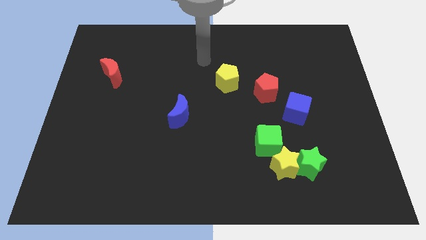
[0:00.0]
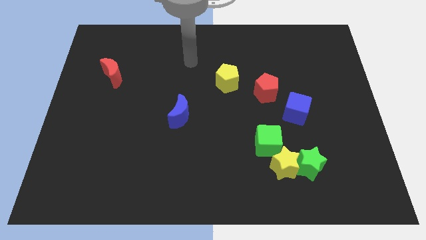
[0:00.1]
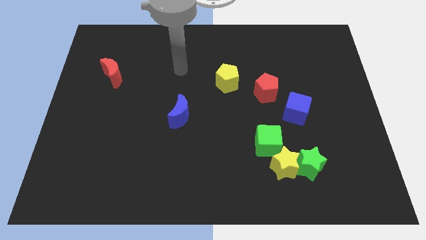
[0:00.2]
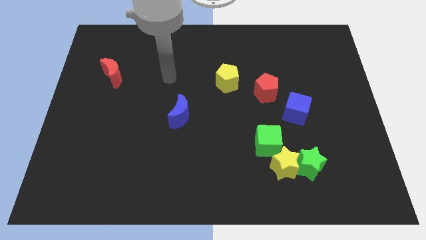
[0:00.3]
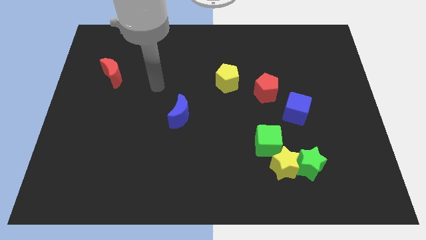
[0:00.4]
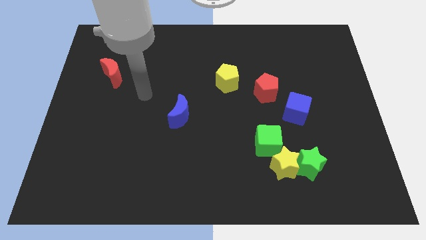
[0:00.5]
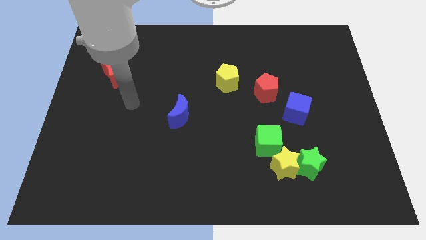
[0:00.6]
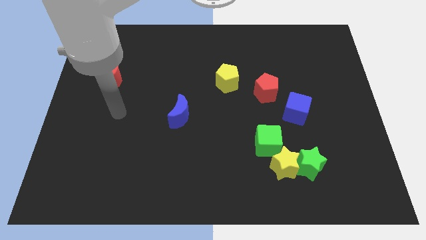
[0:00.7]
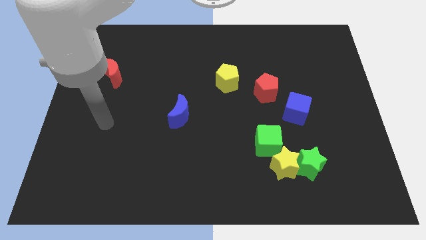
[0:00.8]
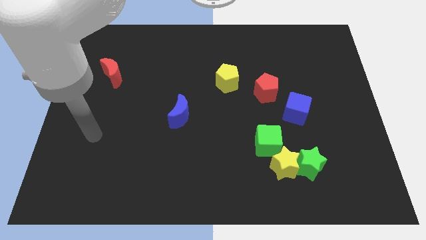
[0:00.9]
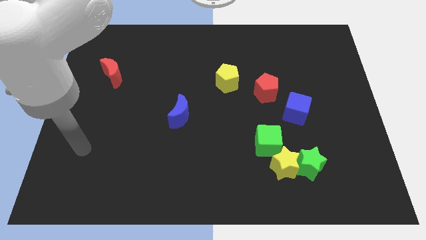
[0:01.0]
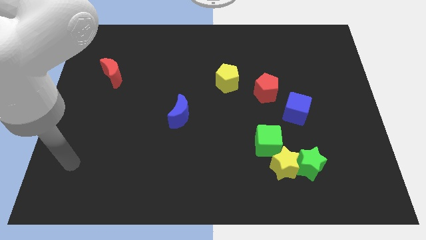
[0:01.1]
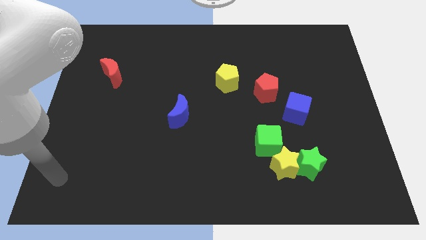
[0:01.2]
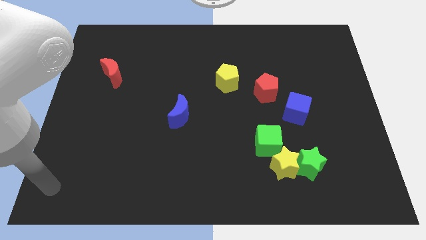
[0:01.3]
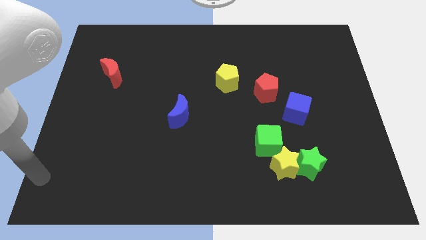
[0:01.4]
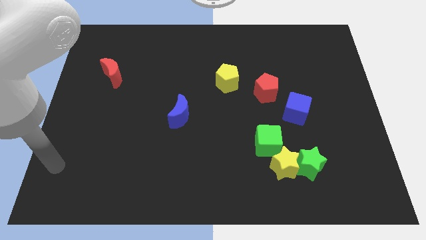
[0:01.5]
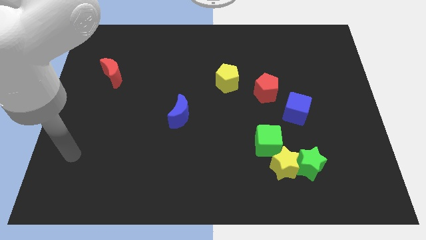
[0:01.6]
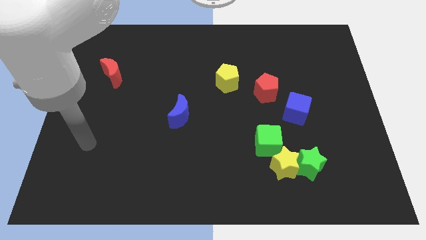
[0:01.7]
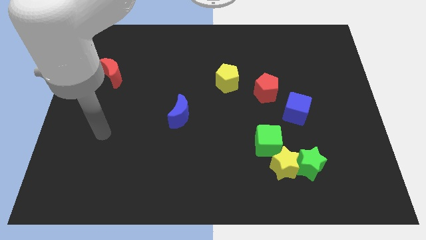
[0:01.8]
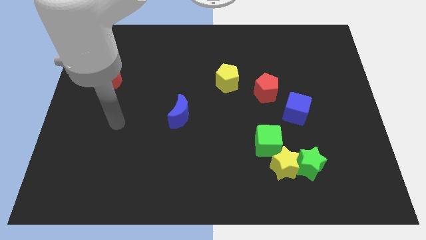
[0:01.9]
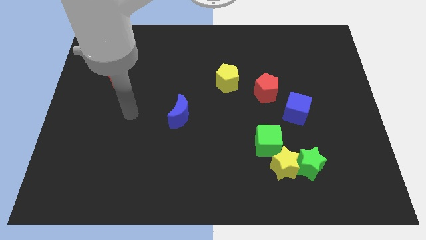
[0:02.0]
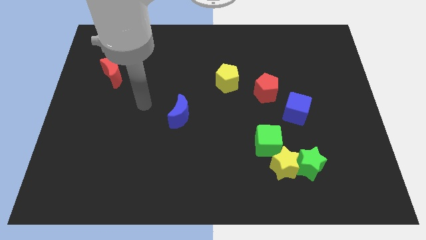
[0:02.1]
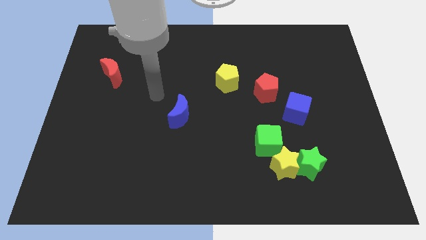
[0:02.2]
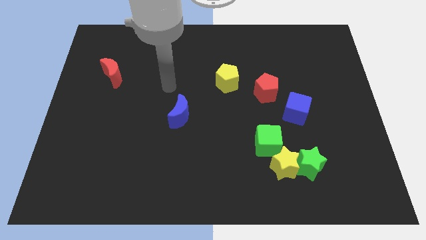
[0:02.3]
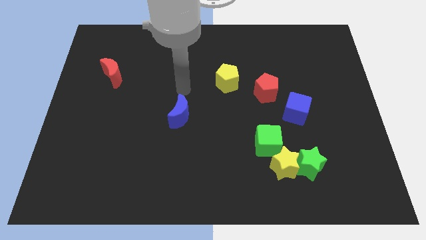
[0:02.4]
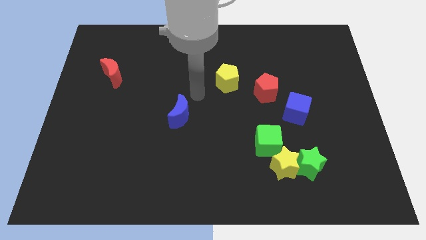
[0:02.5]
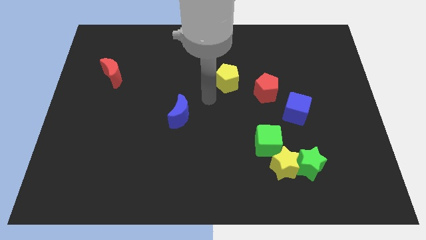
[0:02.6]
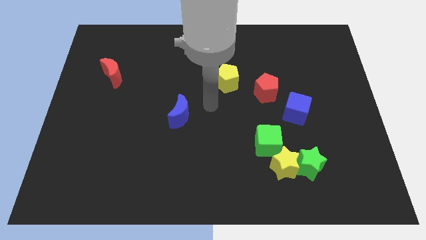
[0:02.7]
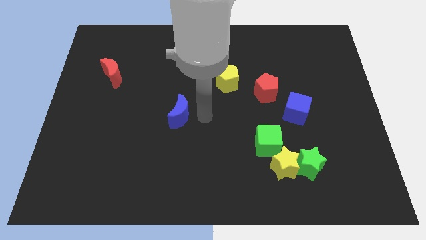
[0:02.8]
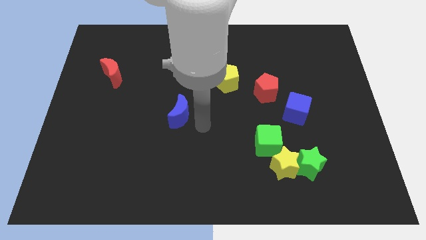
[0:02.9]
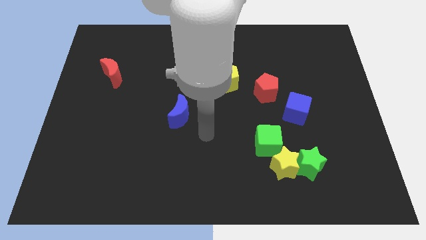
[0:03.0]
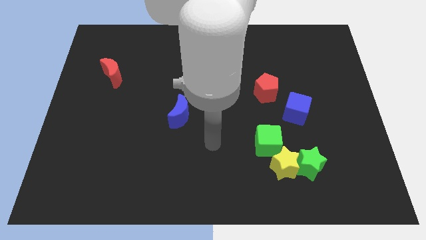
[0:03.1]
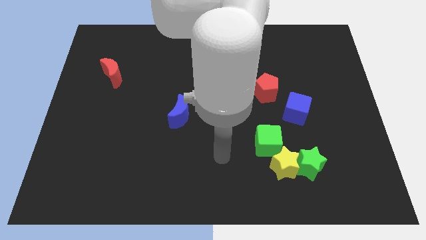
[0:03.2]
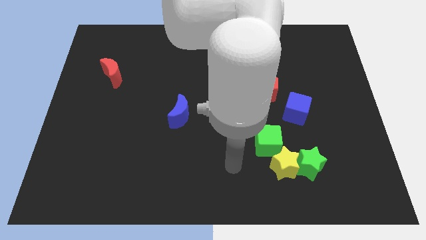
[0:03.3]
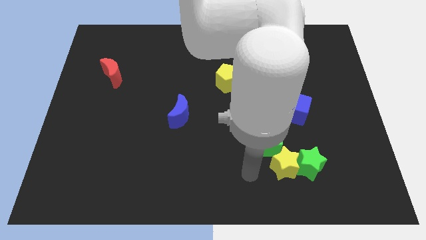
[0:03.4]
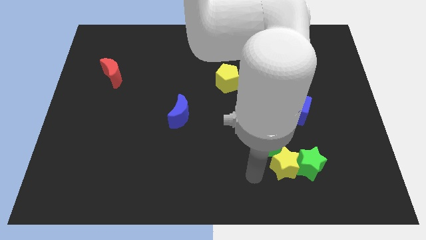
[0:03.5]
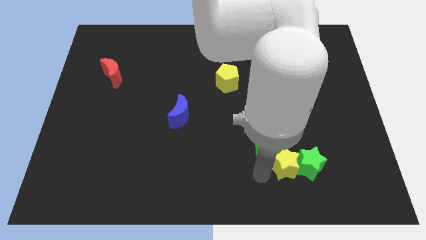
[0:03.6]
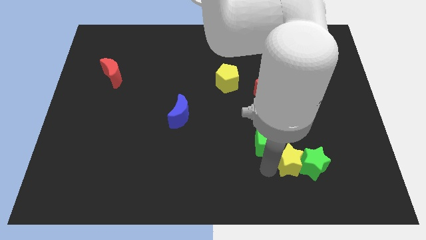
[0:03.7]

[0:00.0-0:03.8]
move the arm into yellow star

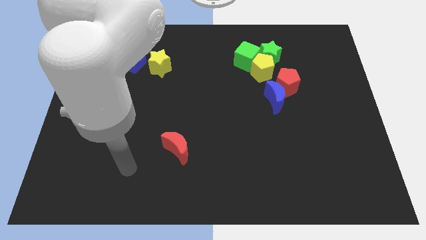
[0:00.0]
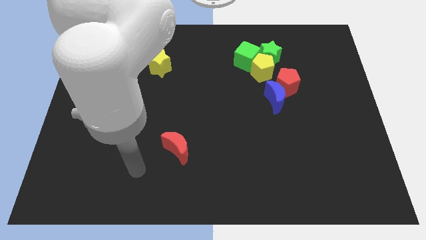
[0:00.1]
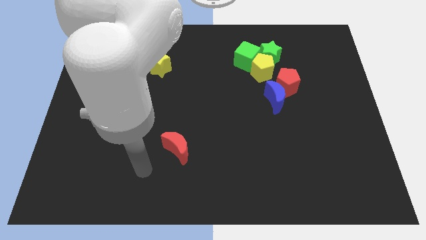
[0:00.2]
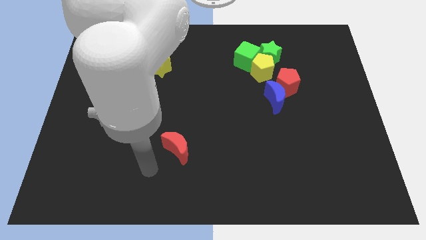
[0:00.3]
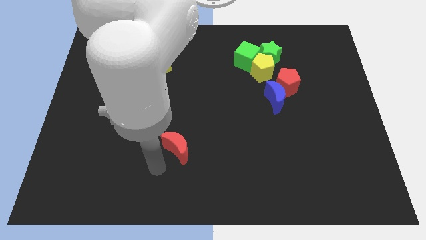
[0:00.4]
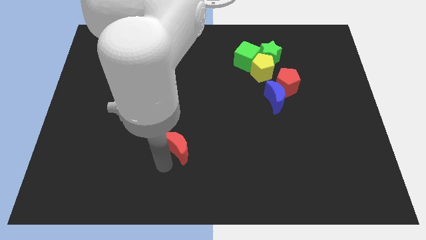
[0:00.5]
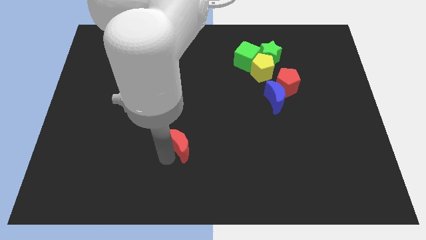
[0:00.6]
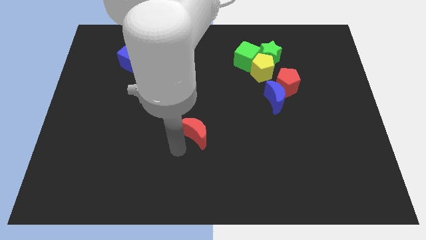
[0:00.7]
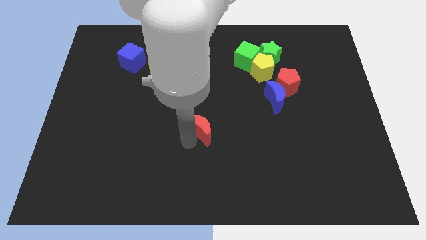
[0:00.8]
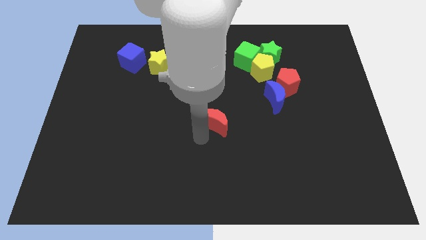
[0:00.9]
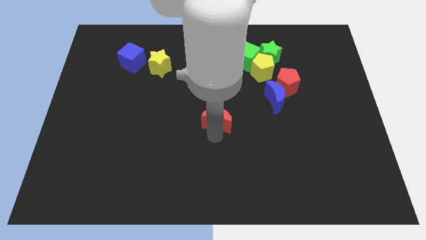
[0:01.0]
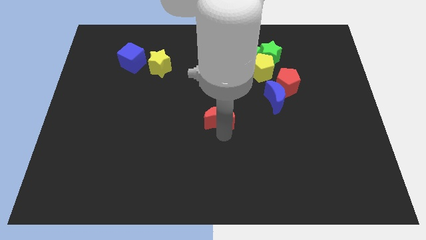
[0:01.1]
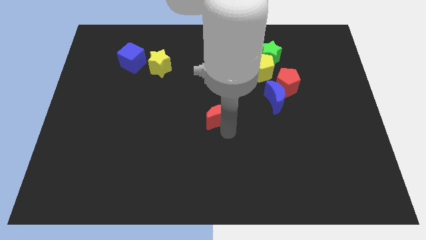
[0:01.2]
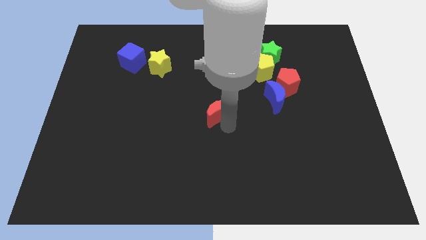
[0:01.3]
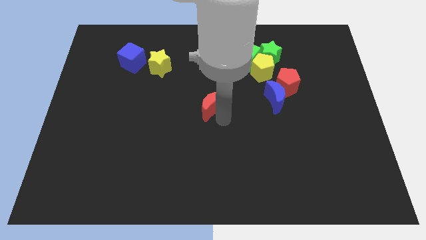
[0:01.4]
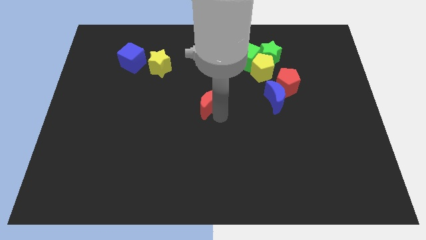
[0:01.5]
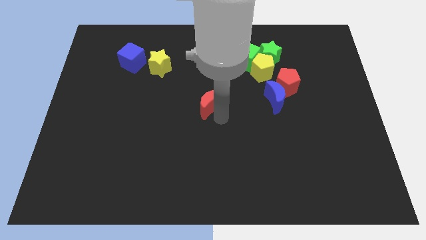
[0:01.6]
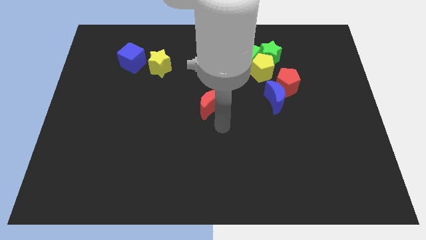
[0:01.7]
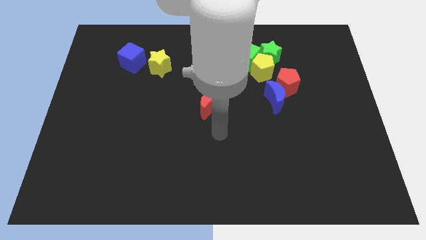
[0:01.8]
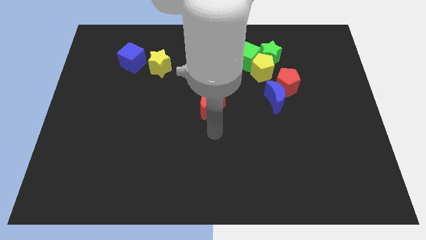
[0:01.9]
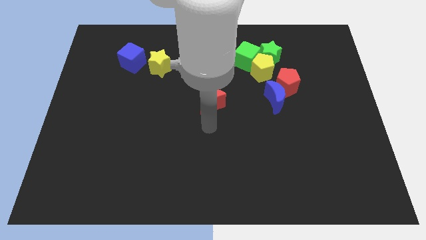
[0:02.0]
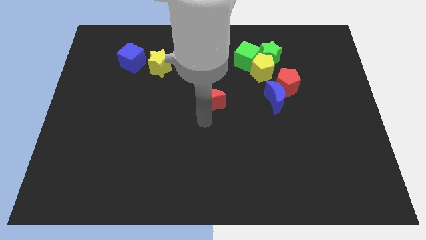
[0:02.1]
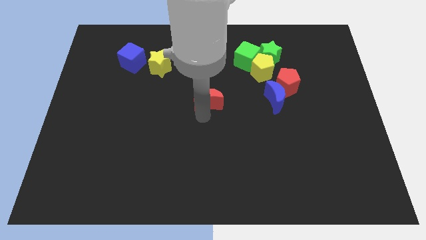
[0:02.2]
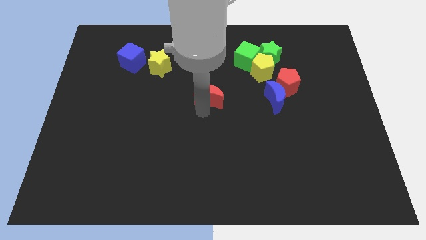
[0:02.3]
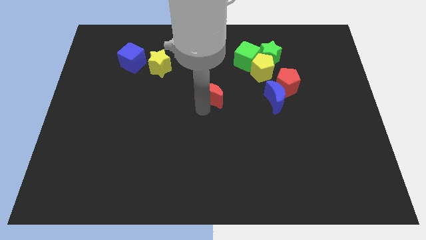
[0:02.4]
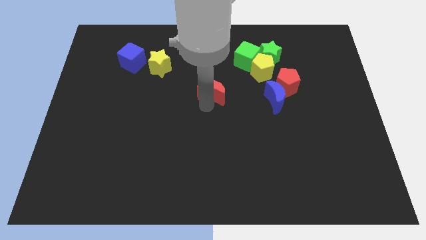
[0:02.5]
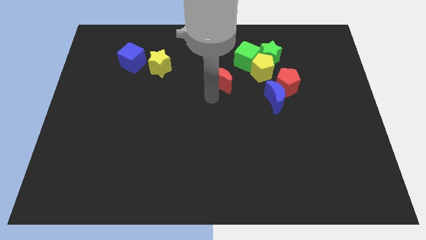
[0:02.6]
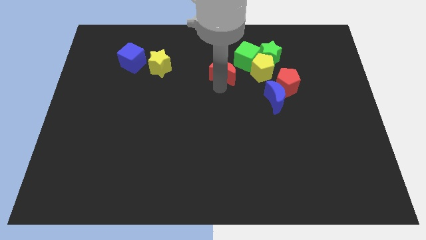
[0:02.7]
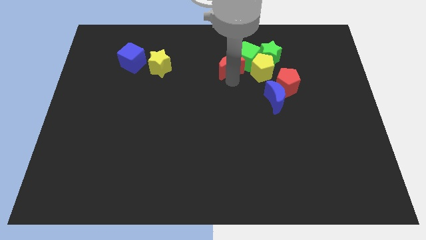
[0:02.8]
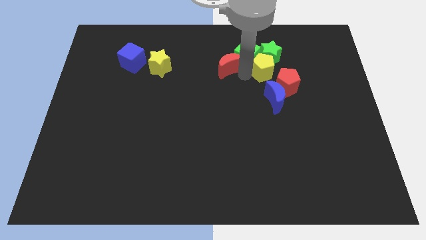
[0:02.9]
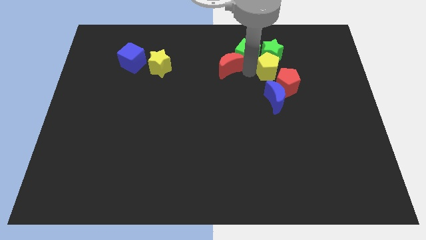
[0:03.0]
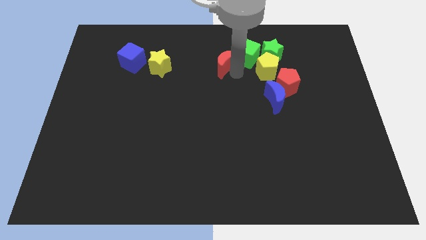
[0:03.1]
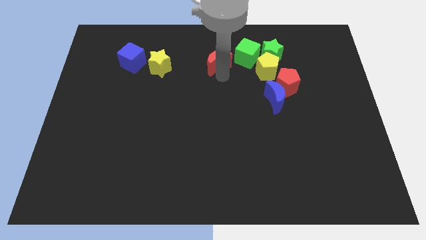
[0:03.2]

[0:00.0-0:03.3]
put the red crescent to the left of the green cube

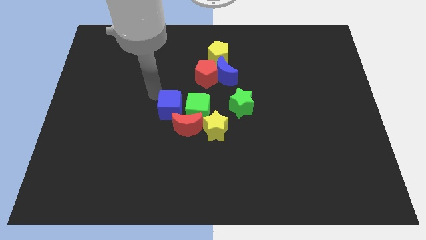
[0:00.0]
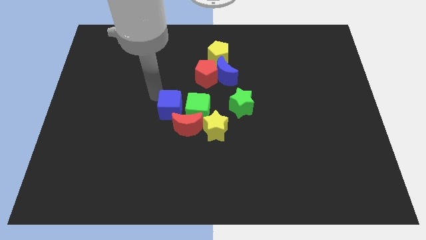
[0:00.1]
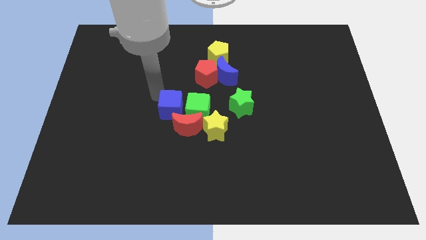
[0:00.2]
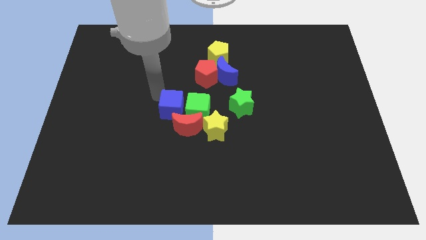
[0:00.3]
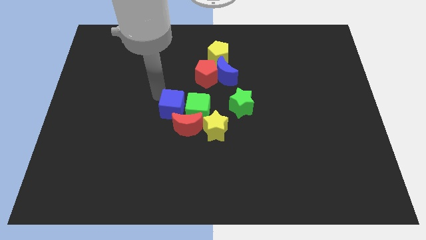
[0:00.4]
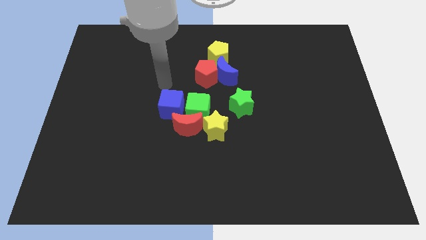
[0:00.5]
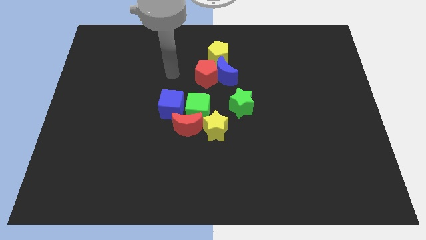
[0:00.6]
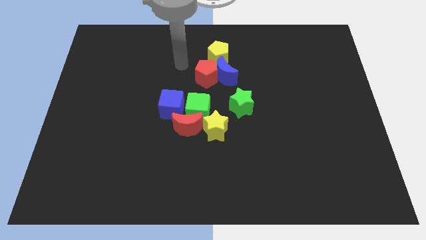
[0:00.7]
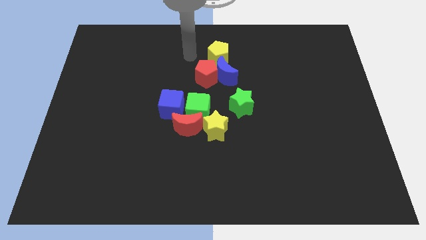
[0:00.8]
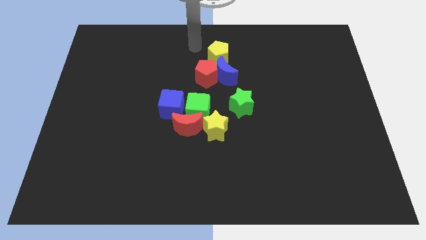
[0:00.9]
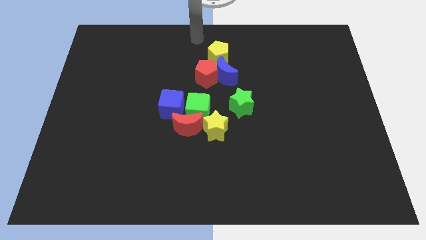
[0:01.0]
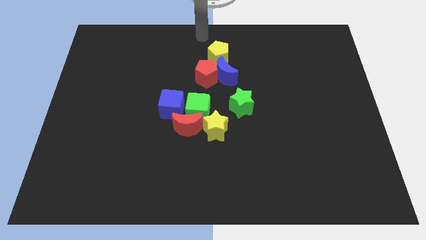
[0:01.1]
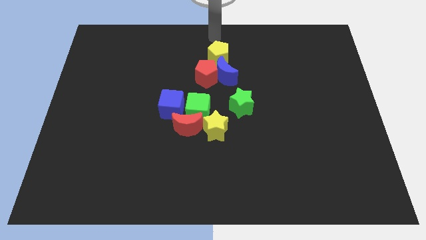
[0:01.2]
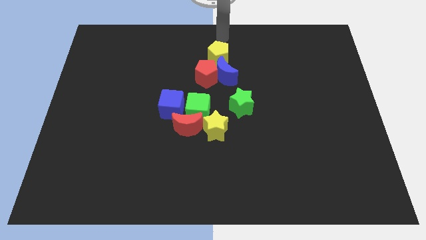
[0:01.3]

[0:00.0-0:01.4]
move arm to the top centre of the board

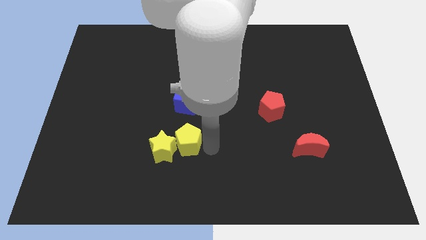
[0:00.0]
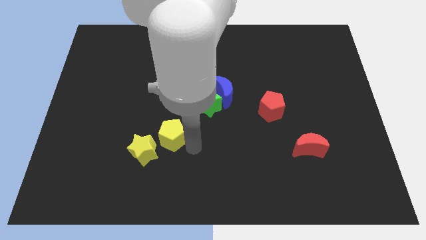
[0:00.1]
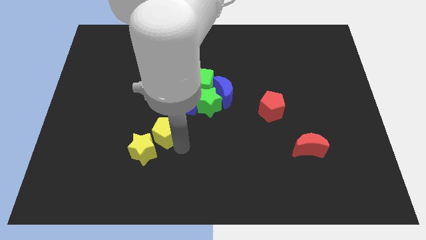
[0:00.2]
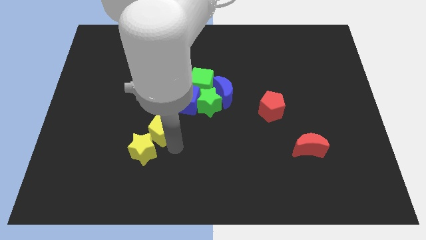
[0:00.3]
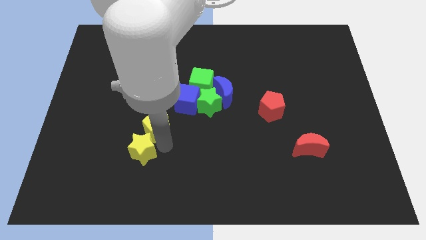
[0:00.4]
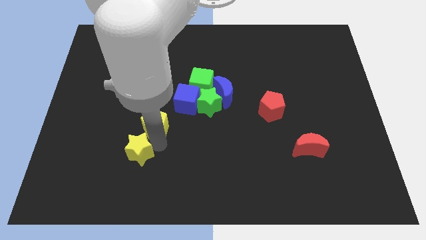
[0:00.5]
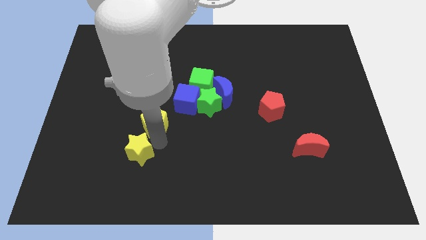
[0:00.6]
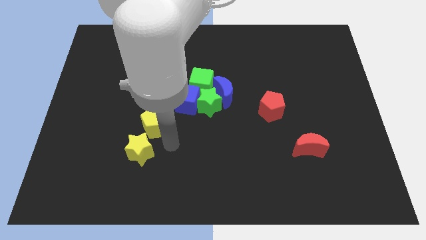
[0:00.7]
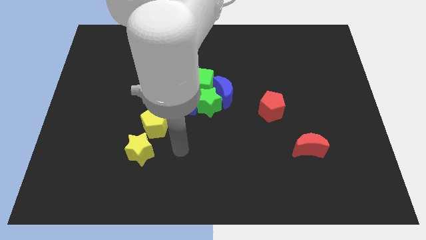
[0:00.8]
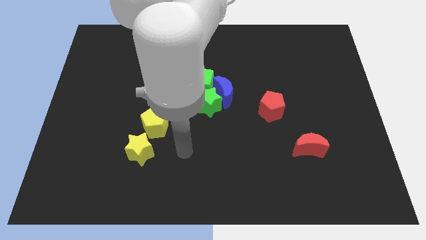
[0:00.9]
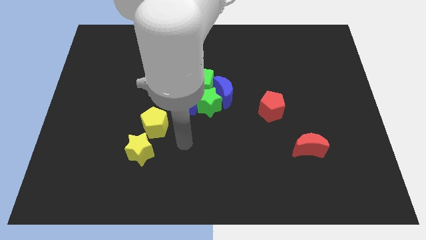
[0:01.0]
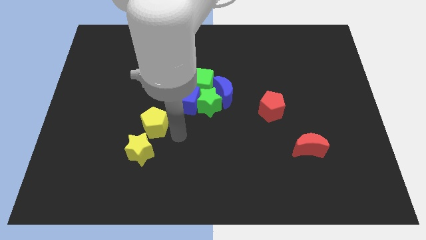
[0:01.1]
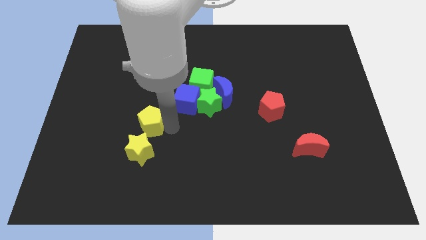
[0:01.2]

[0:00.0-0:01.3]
place the yellow pentagon above the yellow star
